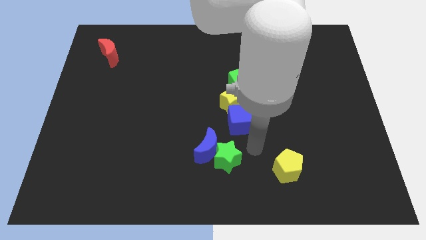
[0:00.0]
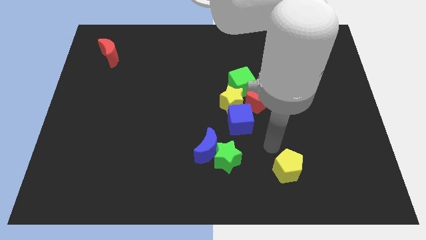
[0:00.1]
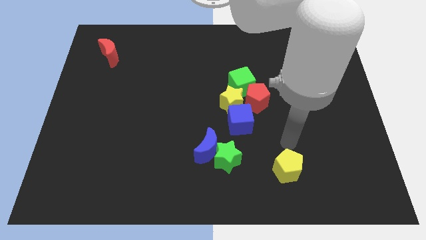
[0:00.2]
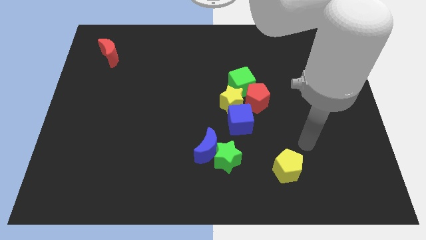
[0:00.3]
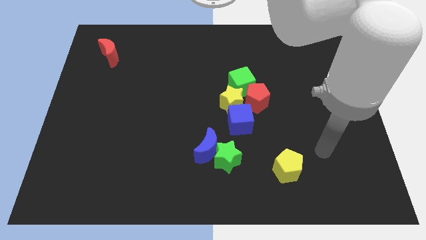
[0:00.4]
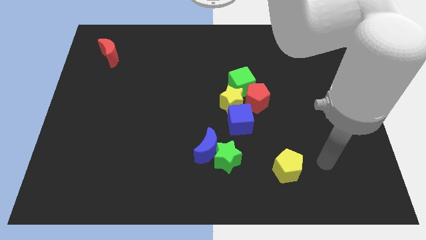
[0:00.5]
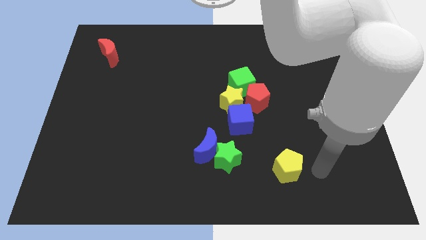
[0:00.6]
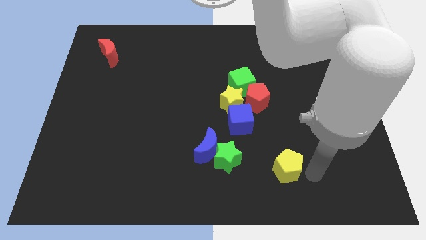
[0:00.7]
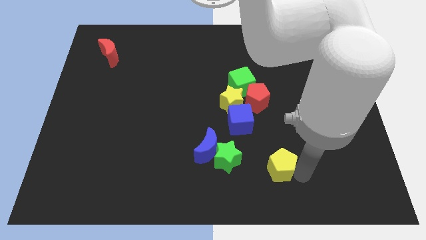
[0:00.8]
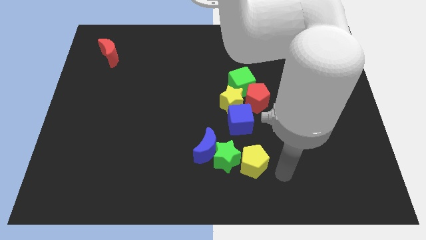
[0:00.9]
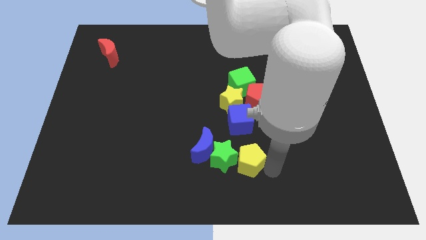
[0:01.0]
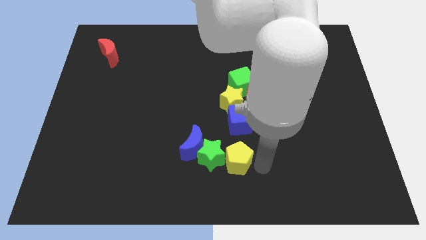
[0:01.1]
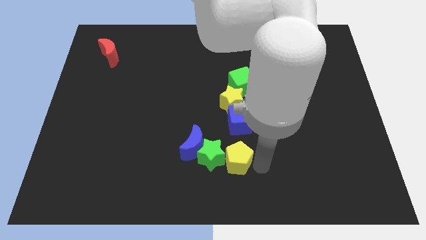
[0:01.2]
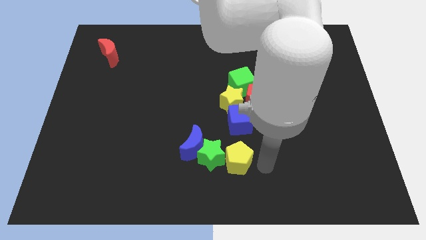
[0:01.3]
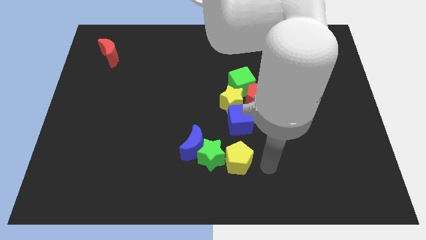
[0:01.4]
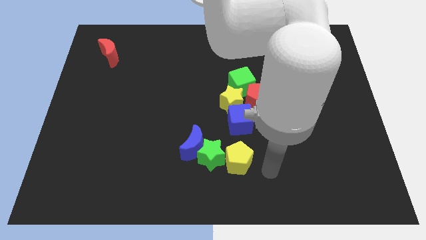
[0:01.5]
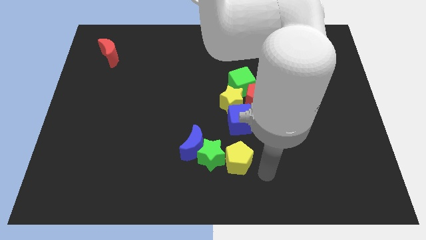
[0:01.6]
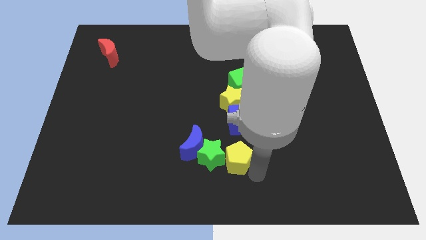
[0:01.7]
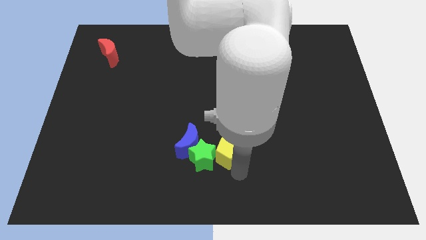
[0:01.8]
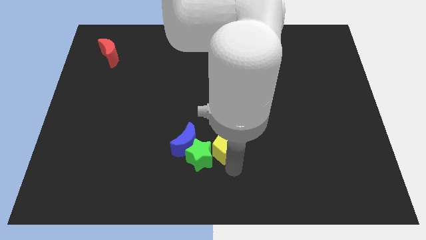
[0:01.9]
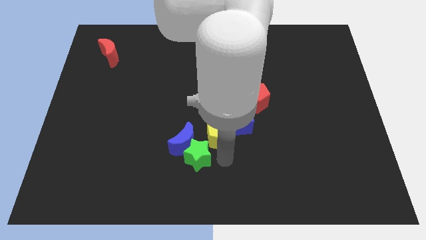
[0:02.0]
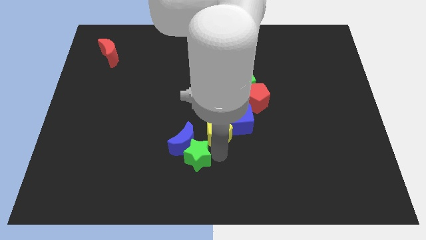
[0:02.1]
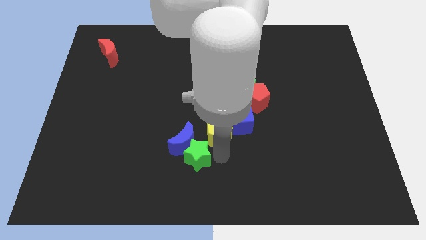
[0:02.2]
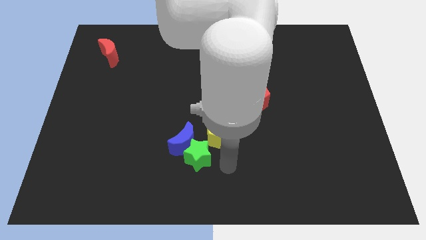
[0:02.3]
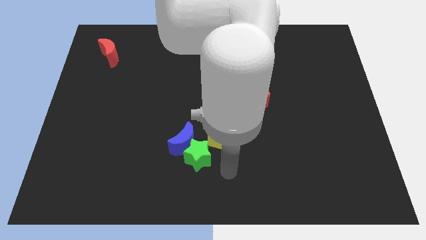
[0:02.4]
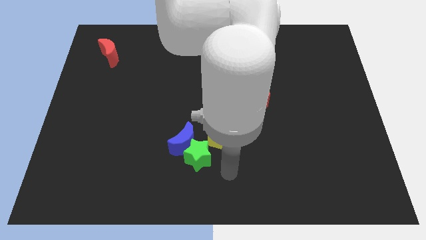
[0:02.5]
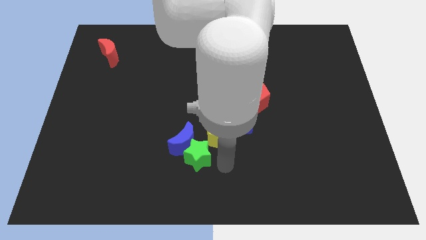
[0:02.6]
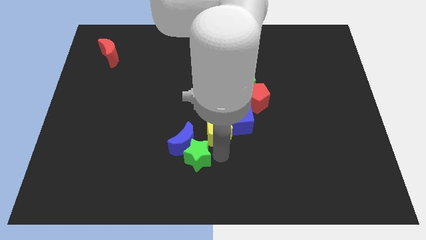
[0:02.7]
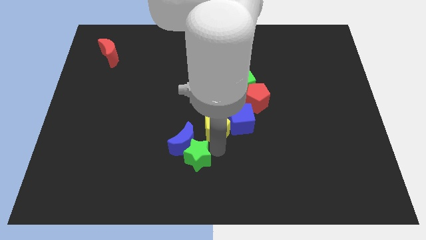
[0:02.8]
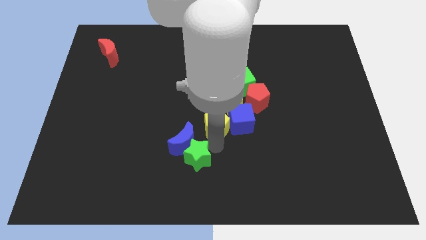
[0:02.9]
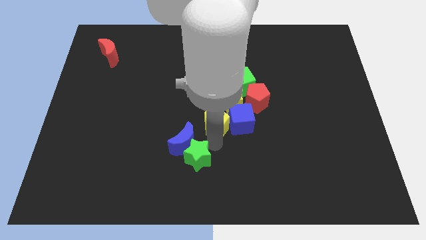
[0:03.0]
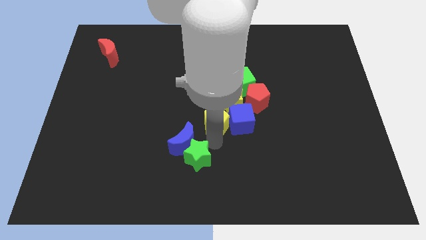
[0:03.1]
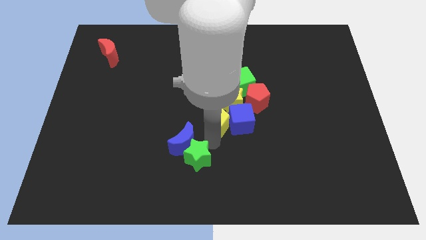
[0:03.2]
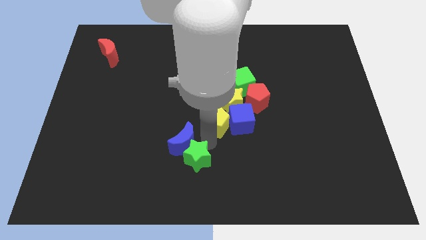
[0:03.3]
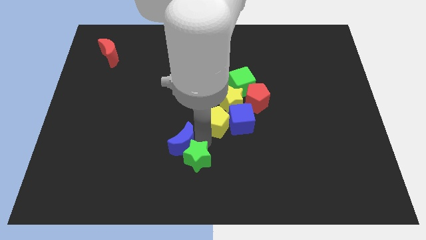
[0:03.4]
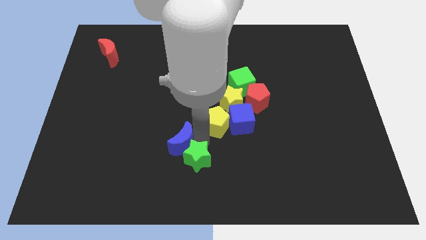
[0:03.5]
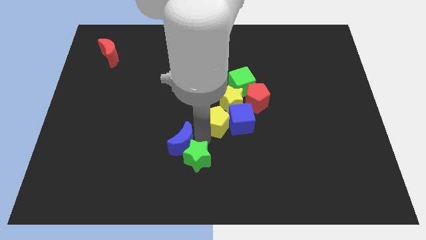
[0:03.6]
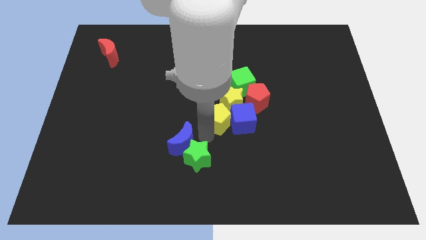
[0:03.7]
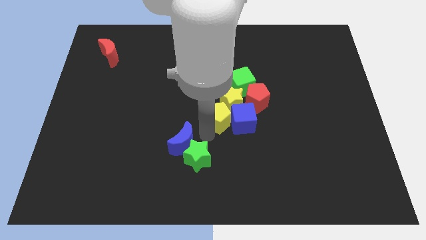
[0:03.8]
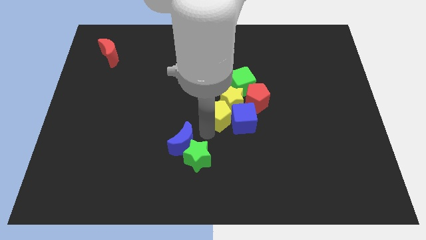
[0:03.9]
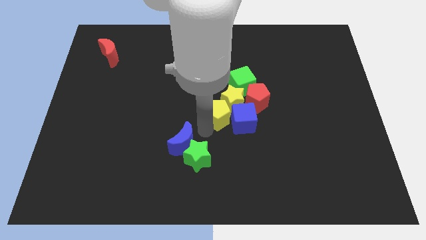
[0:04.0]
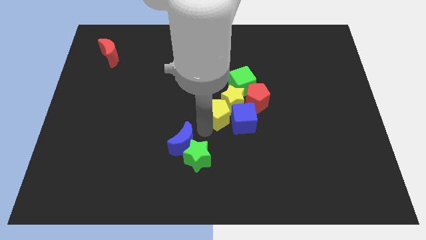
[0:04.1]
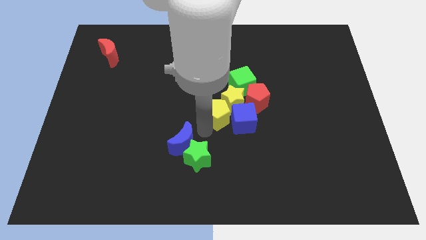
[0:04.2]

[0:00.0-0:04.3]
push the yellow pentagon towards the yellow star

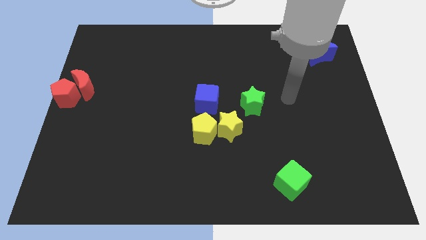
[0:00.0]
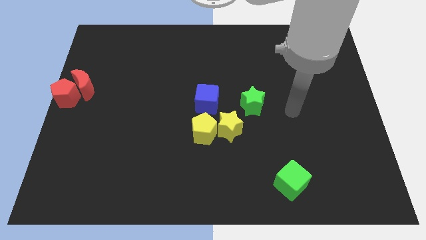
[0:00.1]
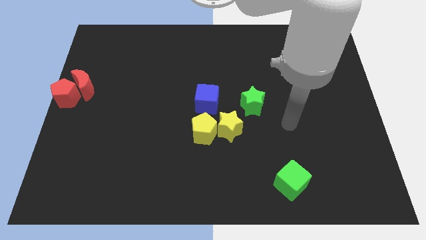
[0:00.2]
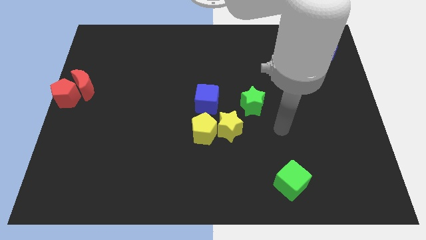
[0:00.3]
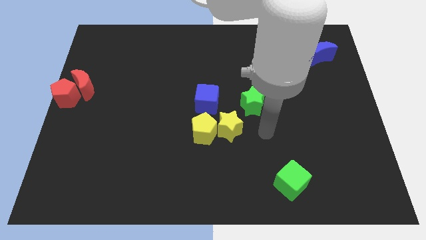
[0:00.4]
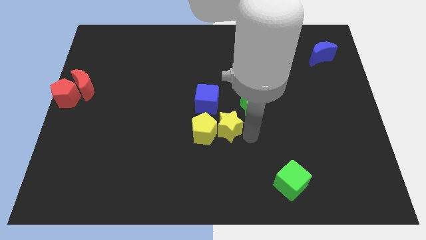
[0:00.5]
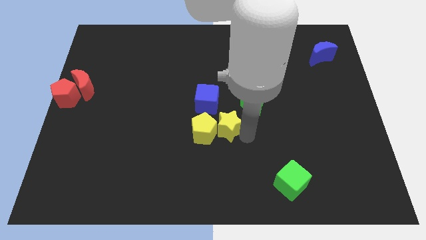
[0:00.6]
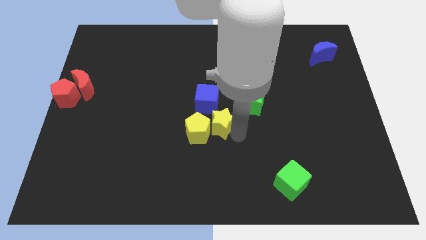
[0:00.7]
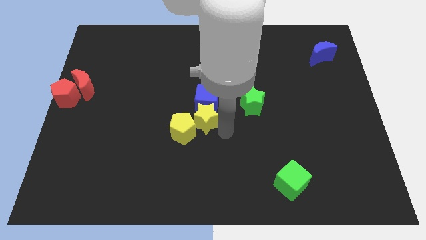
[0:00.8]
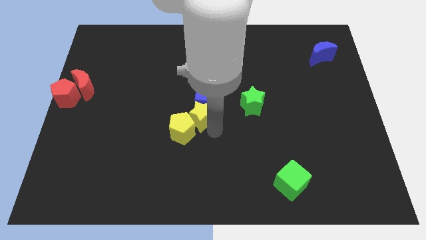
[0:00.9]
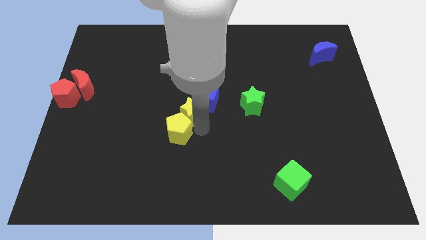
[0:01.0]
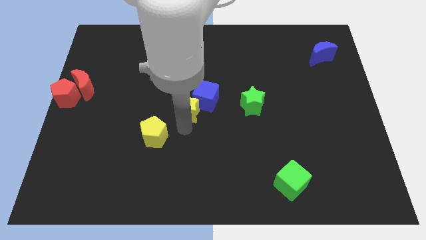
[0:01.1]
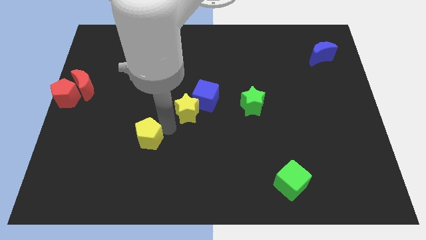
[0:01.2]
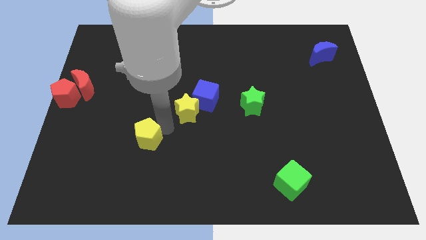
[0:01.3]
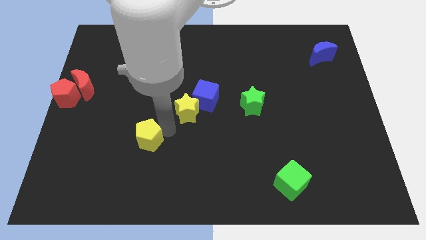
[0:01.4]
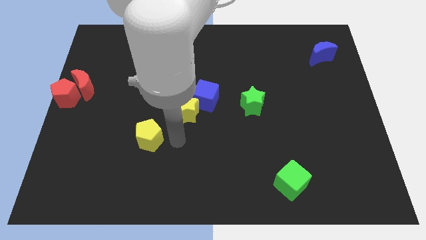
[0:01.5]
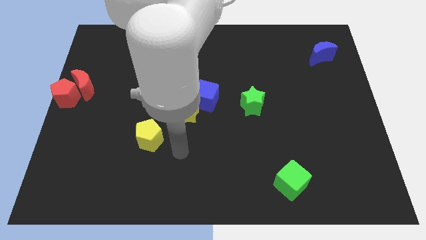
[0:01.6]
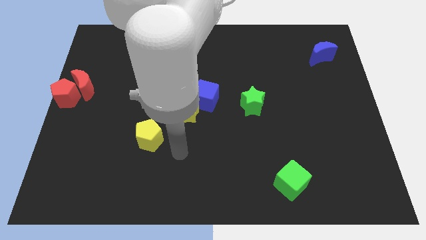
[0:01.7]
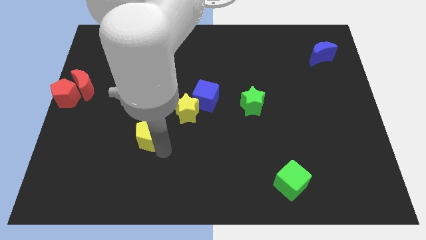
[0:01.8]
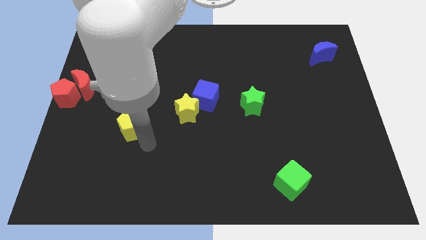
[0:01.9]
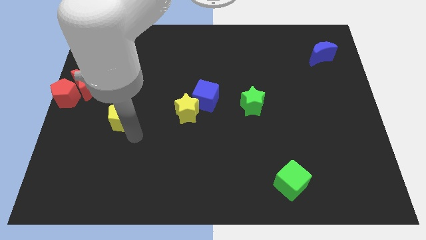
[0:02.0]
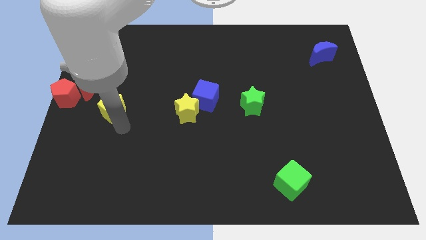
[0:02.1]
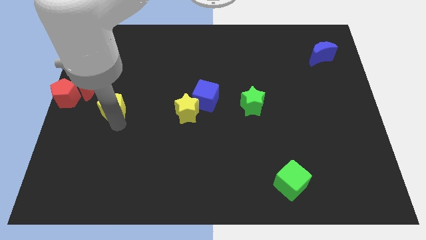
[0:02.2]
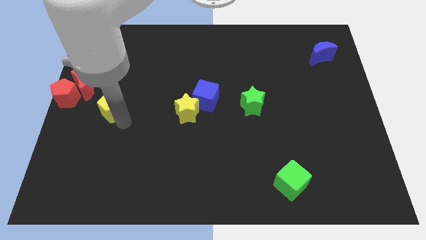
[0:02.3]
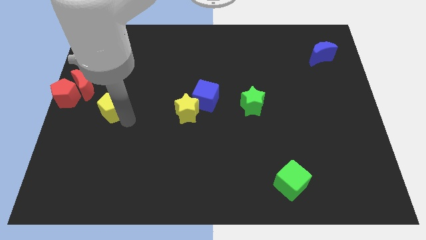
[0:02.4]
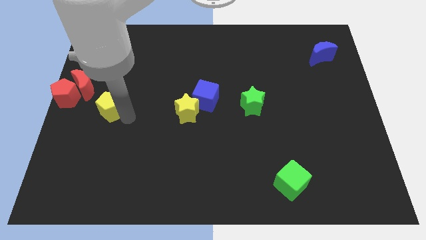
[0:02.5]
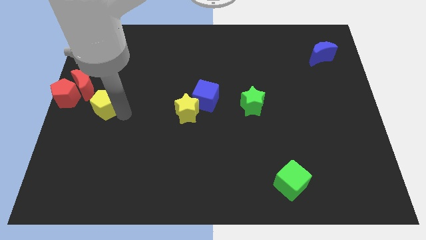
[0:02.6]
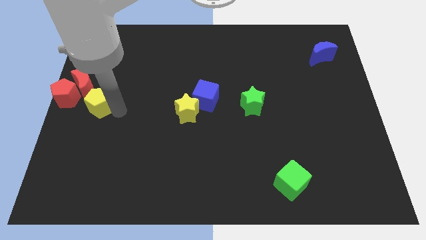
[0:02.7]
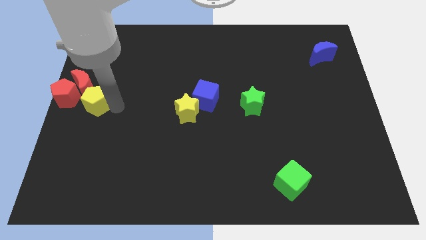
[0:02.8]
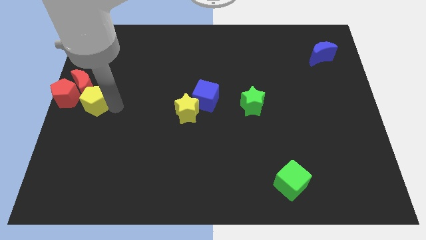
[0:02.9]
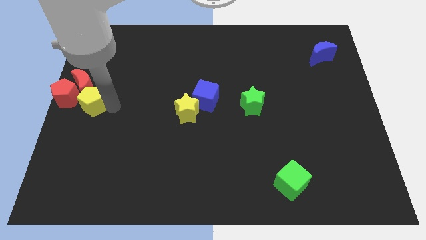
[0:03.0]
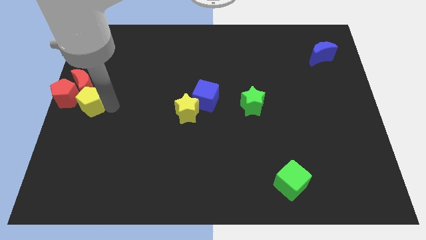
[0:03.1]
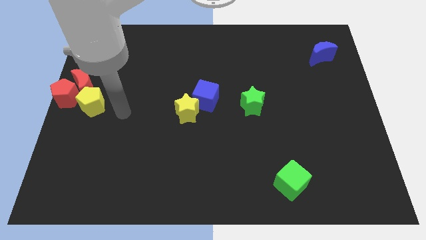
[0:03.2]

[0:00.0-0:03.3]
push the yellow pentagon into the red blocks

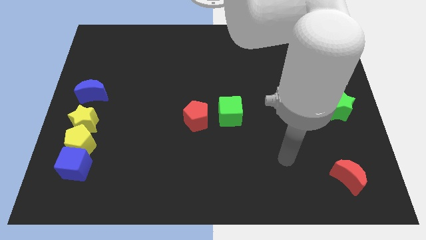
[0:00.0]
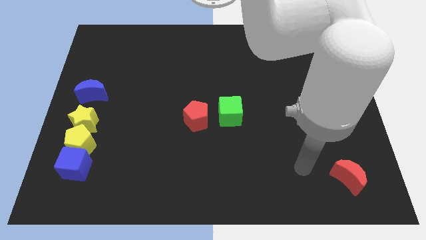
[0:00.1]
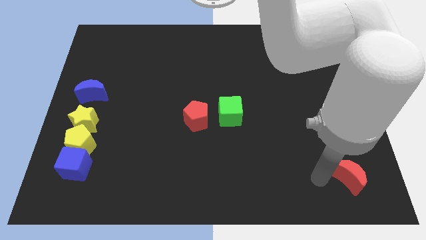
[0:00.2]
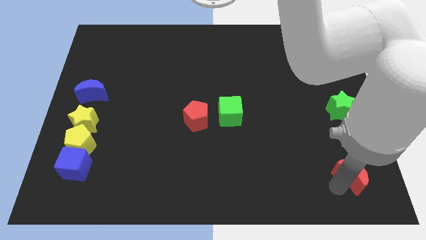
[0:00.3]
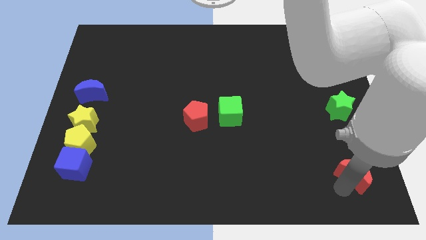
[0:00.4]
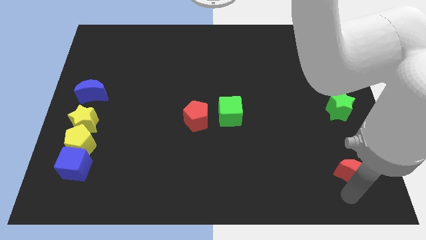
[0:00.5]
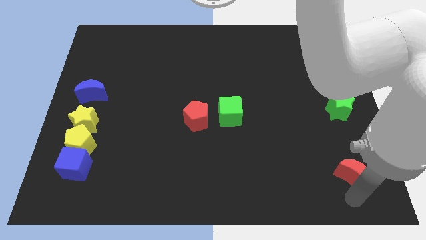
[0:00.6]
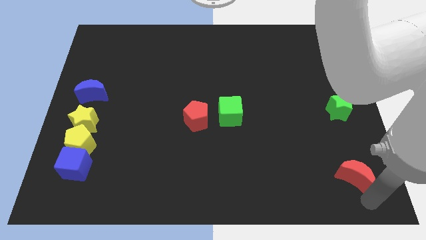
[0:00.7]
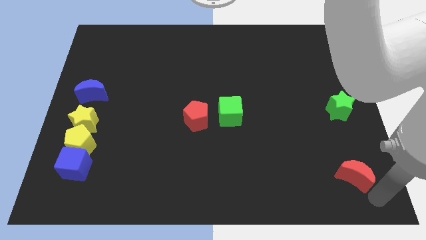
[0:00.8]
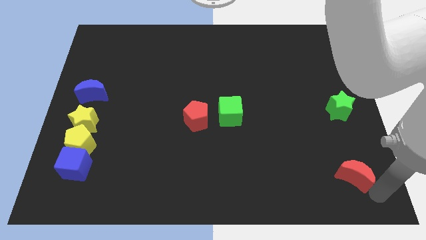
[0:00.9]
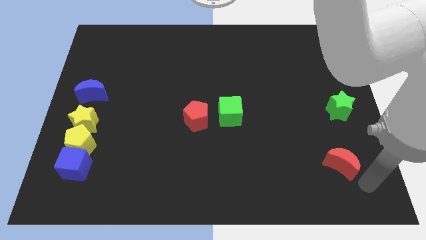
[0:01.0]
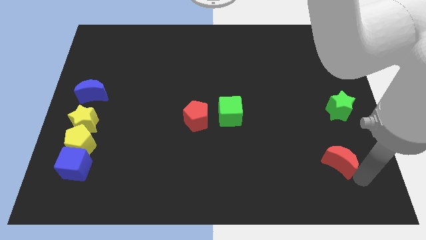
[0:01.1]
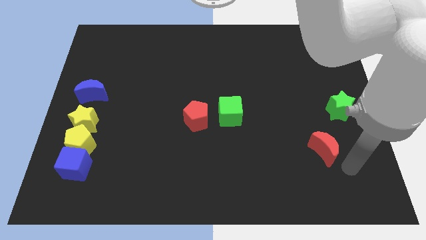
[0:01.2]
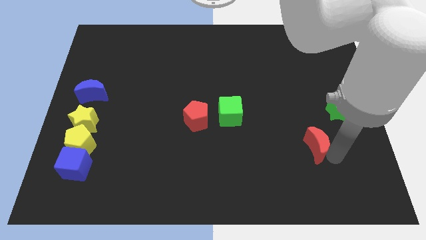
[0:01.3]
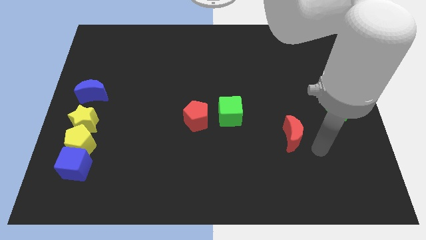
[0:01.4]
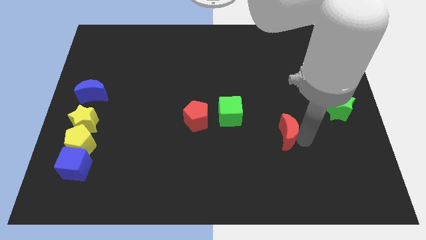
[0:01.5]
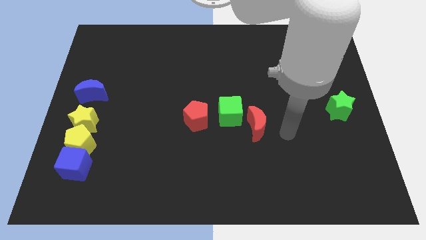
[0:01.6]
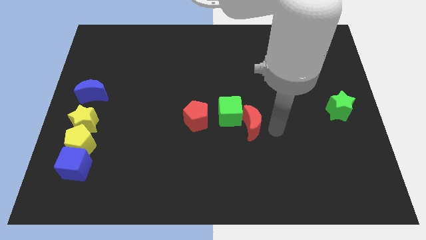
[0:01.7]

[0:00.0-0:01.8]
push the red moon to the right of green cube
